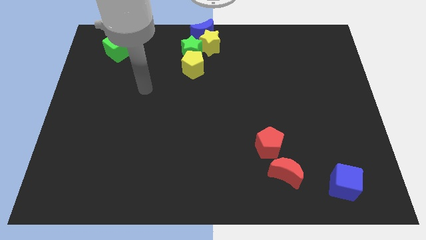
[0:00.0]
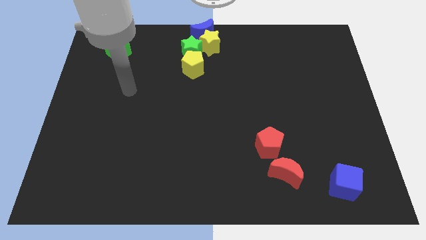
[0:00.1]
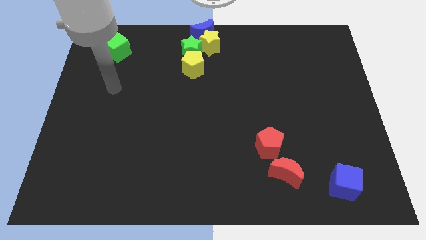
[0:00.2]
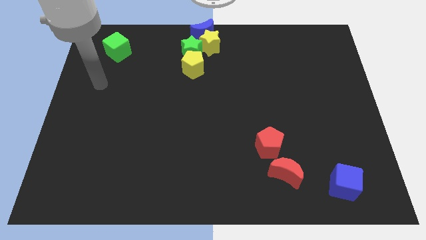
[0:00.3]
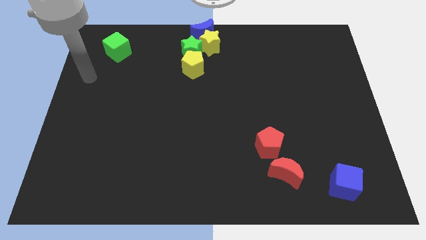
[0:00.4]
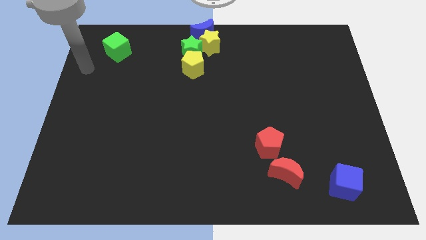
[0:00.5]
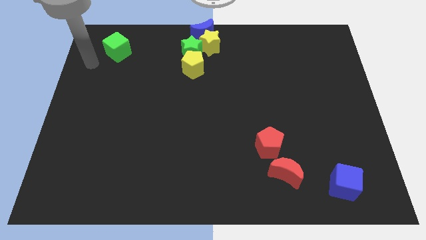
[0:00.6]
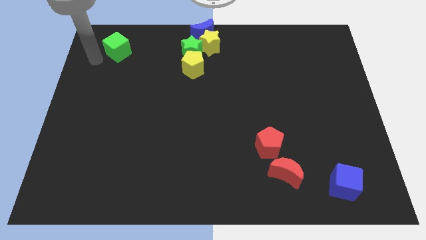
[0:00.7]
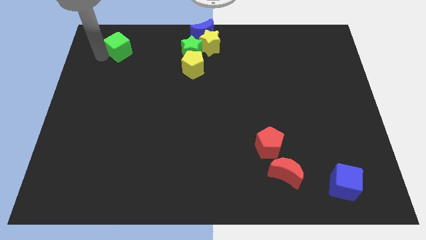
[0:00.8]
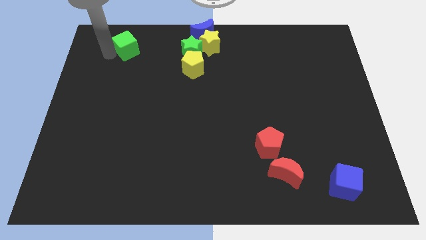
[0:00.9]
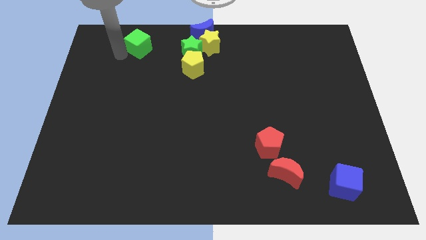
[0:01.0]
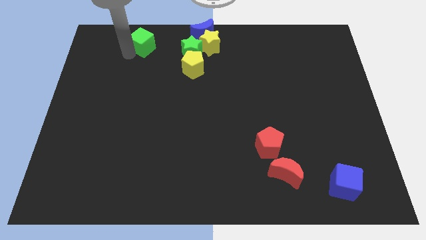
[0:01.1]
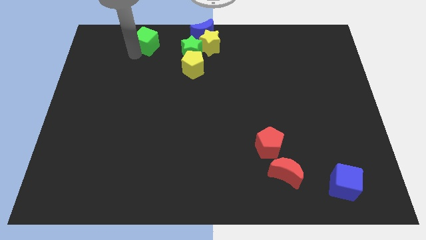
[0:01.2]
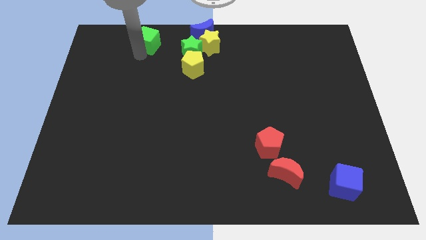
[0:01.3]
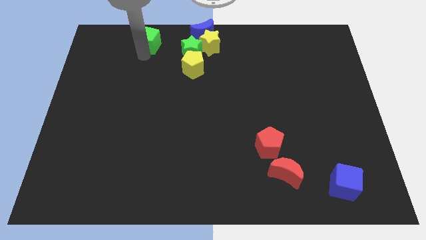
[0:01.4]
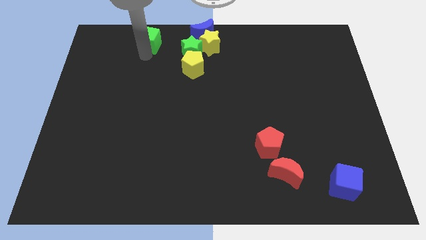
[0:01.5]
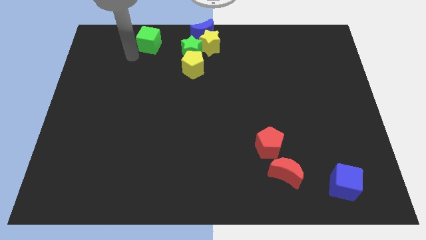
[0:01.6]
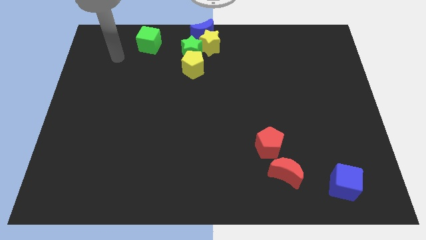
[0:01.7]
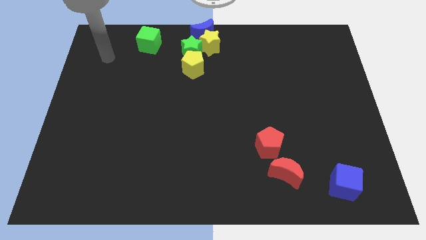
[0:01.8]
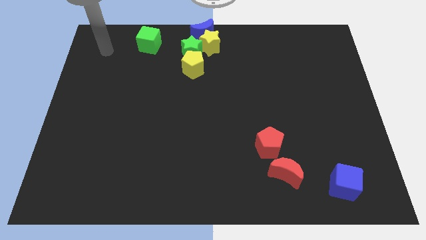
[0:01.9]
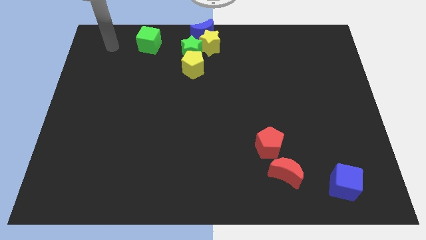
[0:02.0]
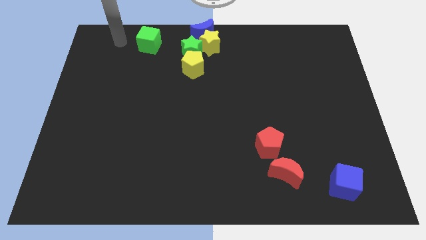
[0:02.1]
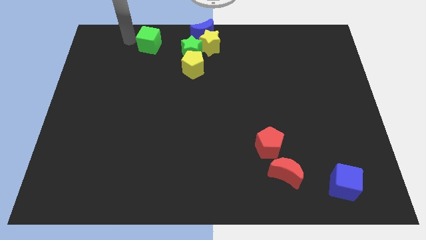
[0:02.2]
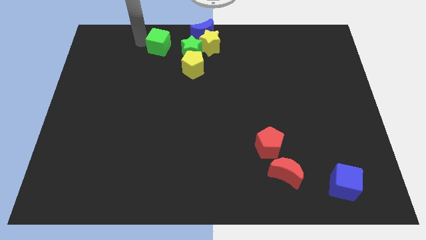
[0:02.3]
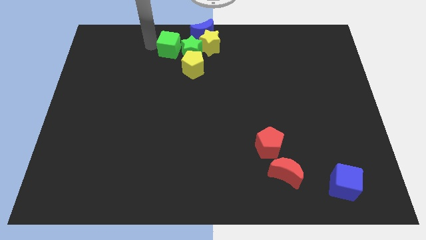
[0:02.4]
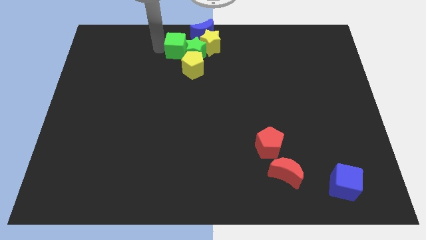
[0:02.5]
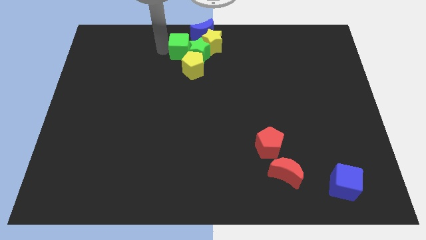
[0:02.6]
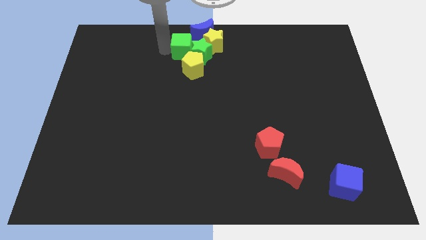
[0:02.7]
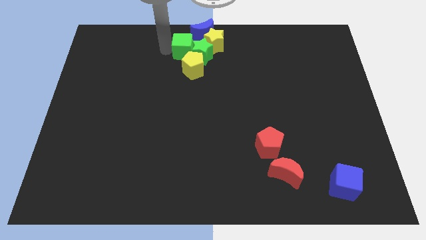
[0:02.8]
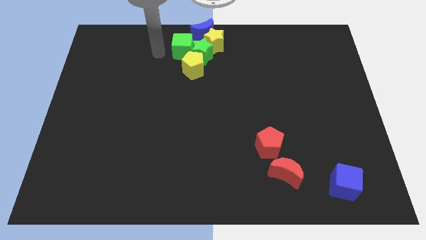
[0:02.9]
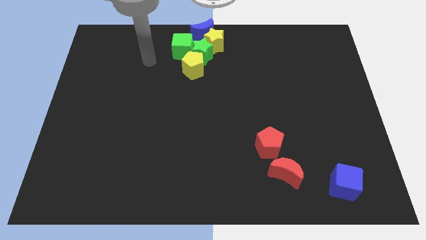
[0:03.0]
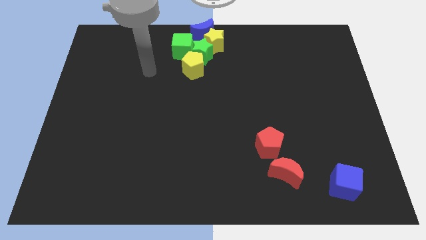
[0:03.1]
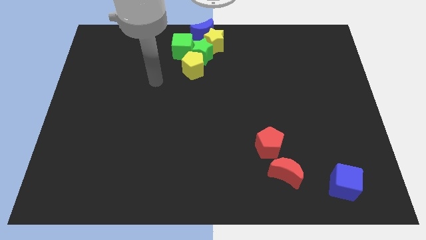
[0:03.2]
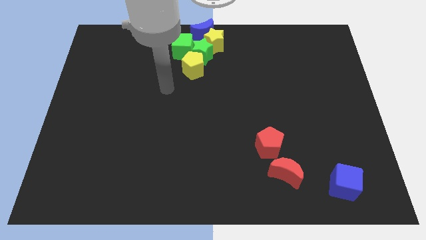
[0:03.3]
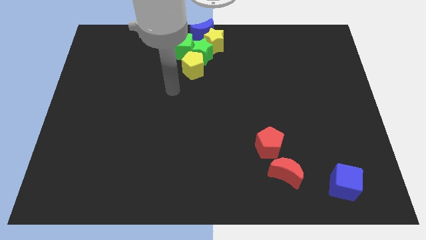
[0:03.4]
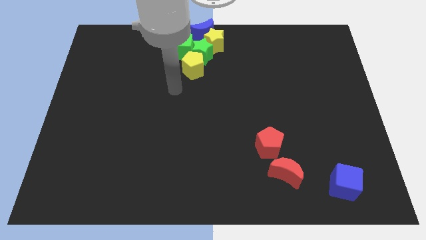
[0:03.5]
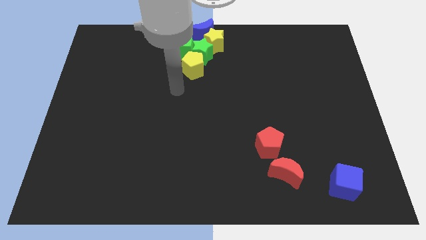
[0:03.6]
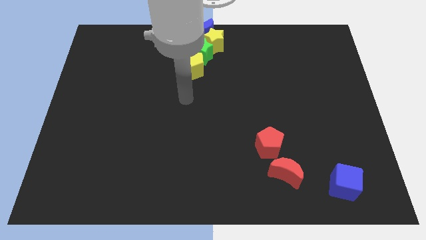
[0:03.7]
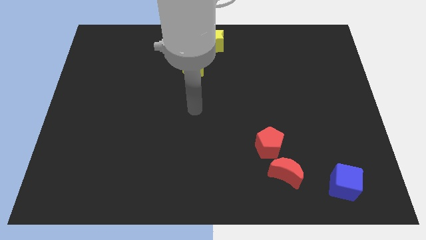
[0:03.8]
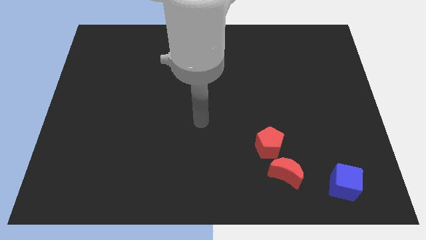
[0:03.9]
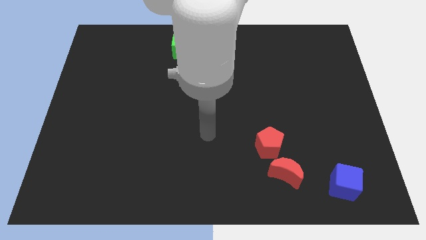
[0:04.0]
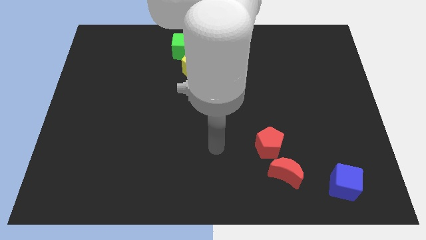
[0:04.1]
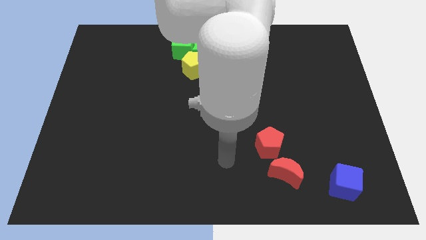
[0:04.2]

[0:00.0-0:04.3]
slide the green cube to the top center

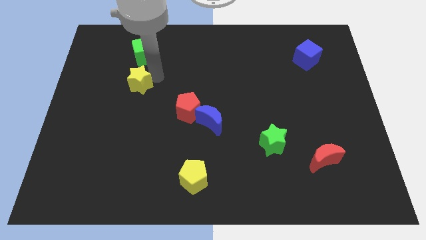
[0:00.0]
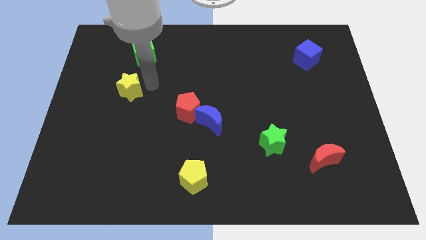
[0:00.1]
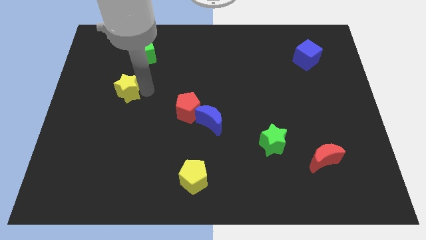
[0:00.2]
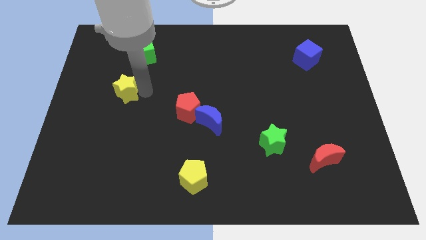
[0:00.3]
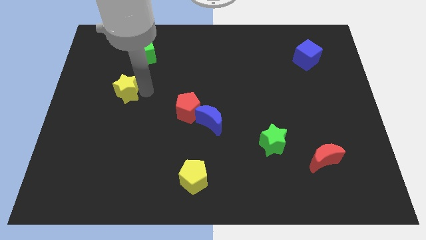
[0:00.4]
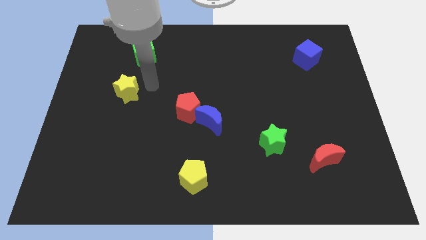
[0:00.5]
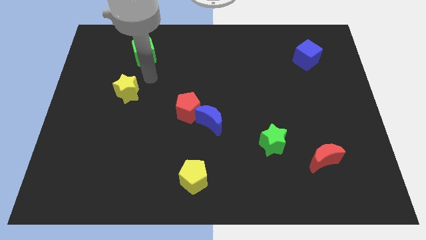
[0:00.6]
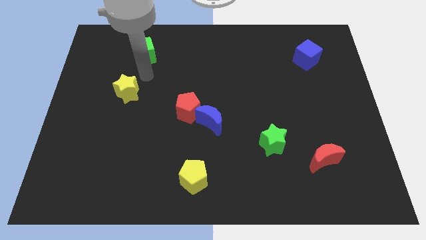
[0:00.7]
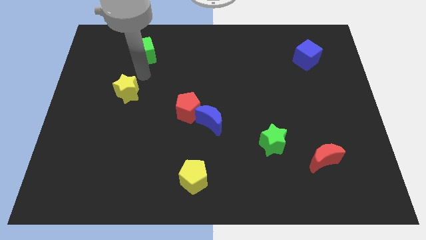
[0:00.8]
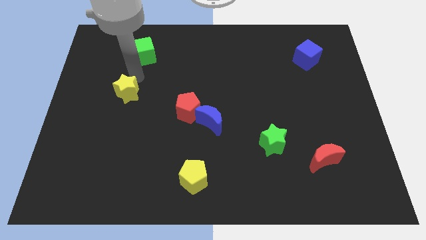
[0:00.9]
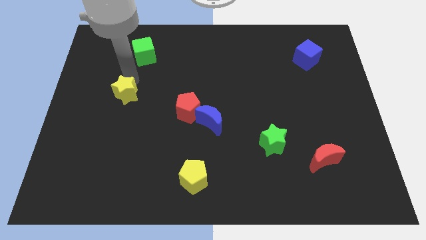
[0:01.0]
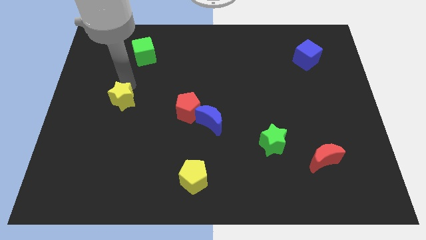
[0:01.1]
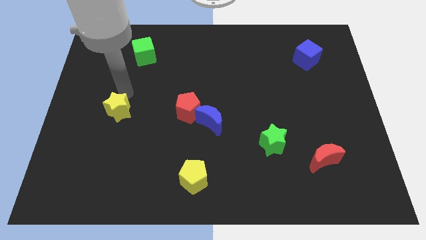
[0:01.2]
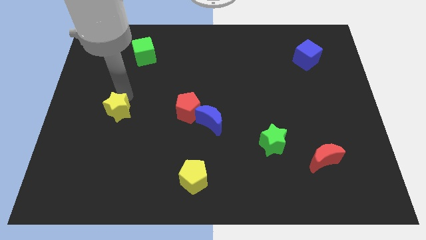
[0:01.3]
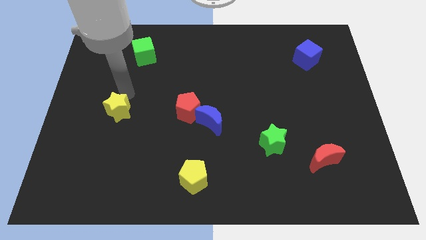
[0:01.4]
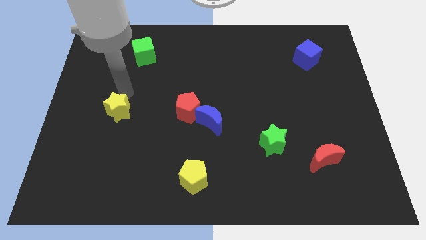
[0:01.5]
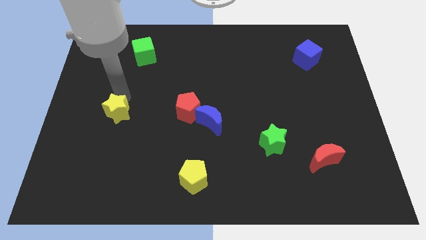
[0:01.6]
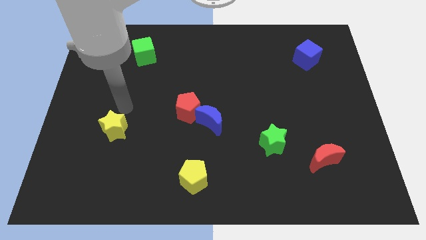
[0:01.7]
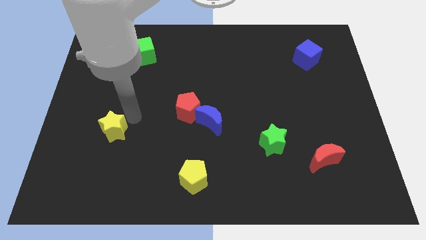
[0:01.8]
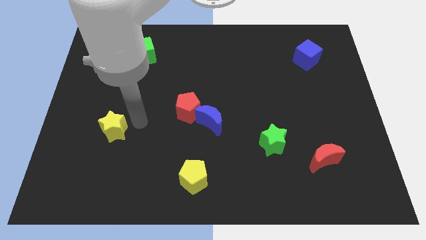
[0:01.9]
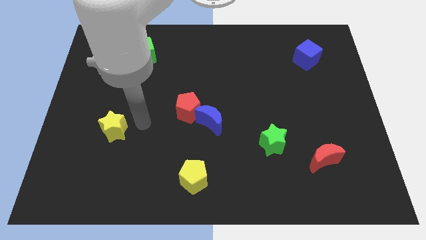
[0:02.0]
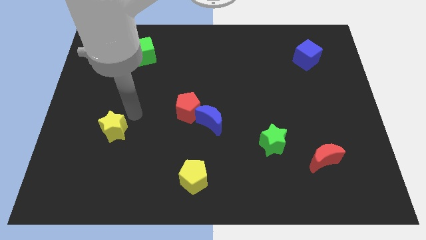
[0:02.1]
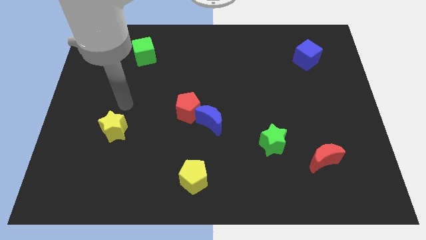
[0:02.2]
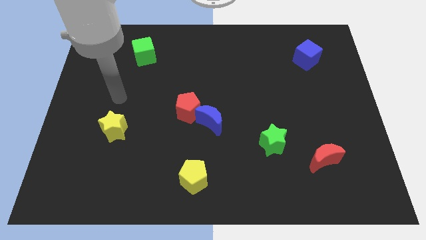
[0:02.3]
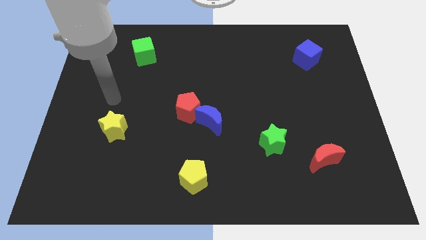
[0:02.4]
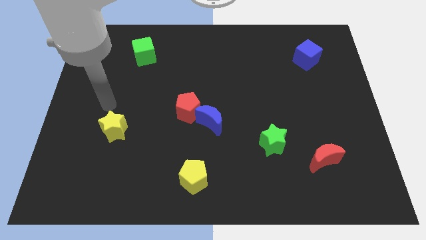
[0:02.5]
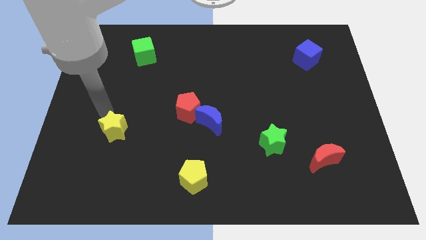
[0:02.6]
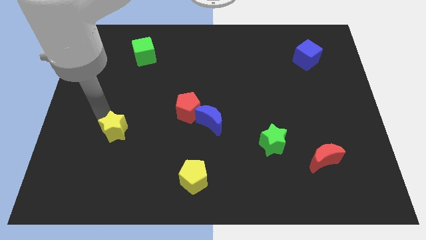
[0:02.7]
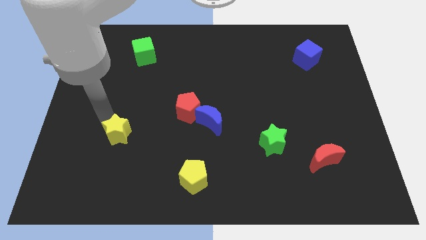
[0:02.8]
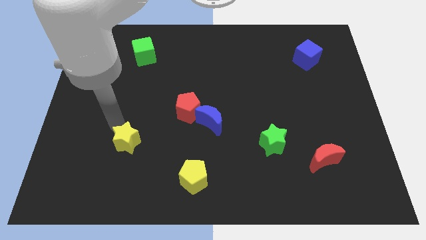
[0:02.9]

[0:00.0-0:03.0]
move the yellow star down wards

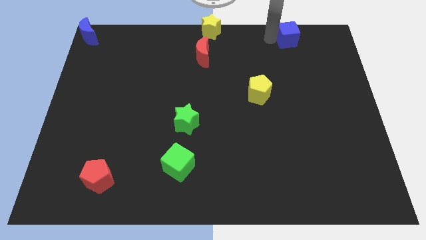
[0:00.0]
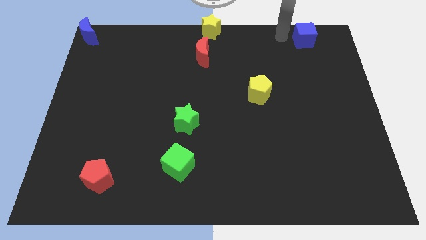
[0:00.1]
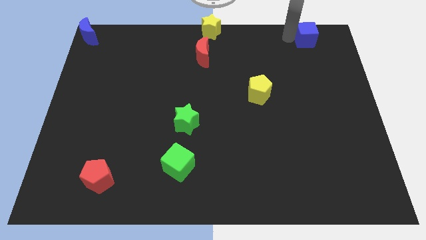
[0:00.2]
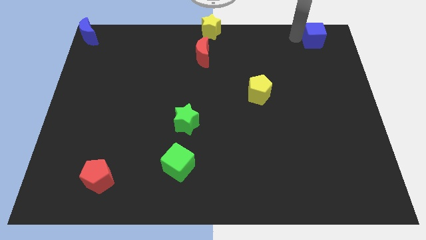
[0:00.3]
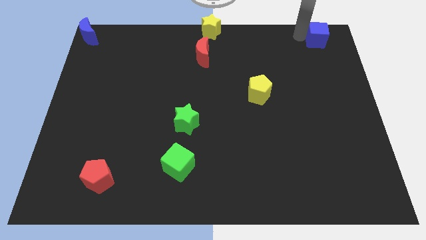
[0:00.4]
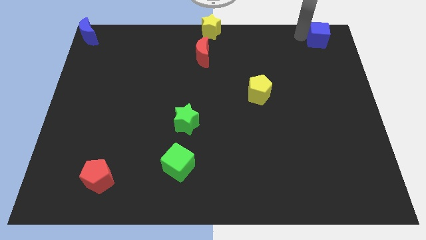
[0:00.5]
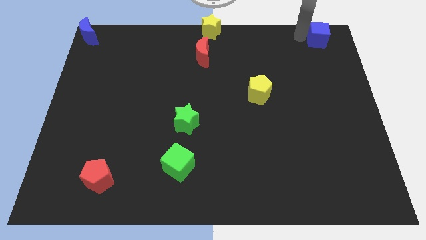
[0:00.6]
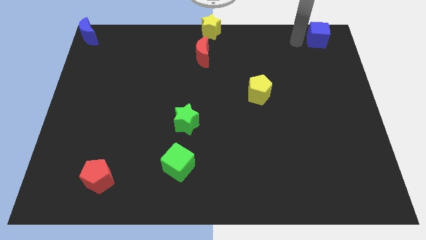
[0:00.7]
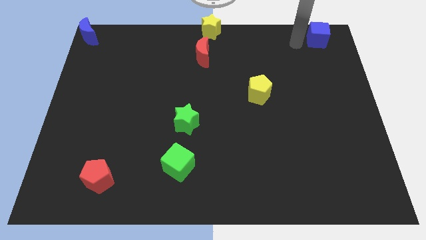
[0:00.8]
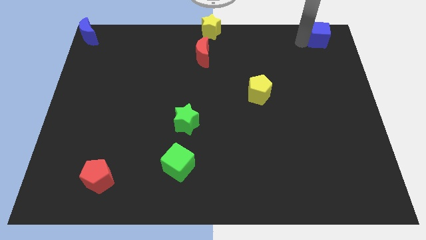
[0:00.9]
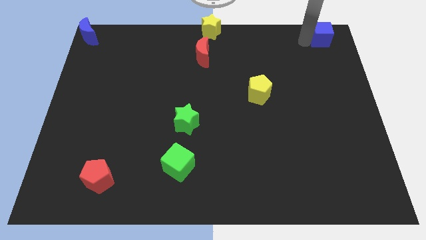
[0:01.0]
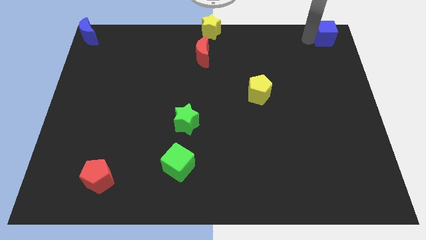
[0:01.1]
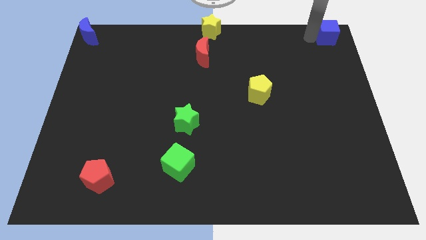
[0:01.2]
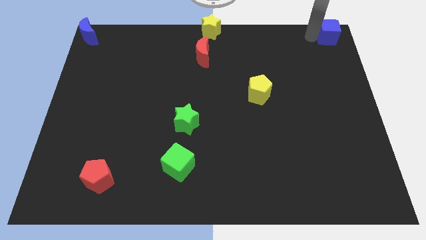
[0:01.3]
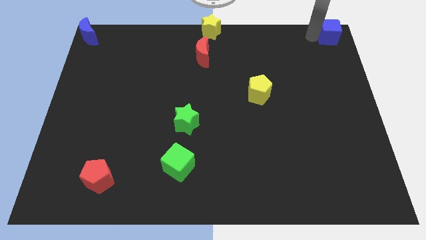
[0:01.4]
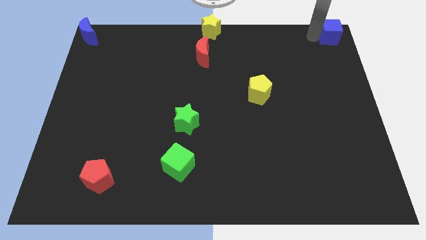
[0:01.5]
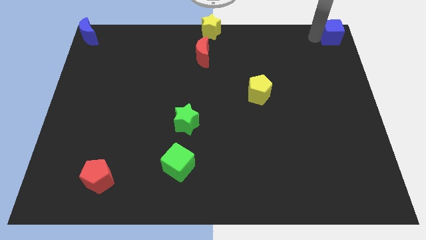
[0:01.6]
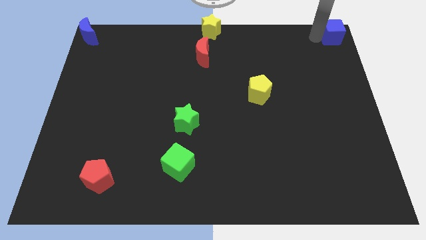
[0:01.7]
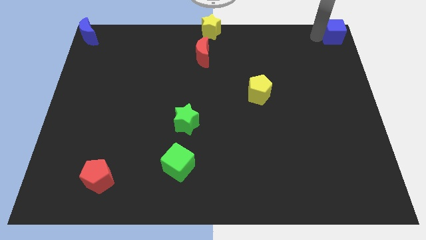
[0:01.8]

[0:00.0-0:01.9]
place the blue cube at the top right corner of the board
